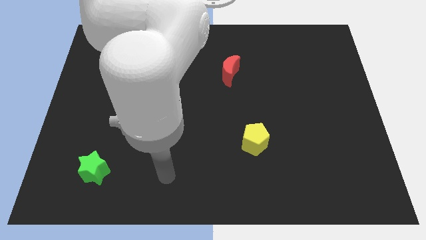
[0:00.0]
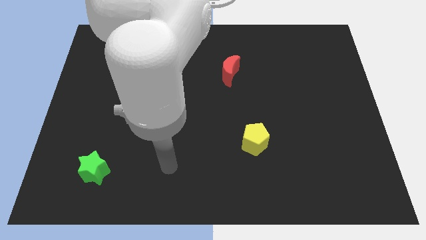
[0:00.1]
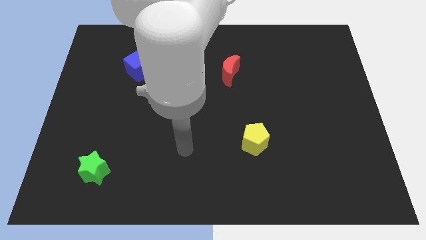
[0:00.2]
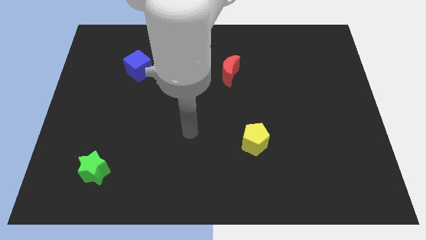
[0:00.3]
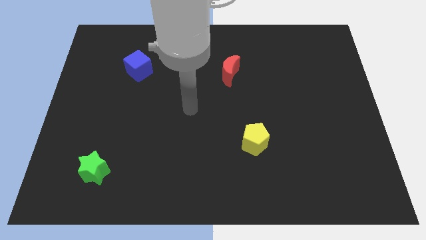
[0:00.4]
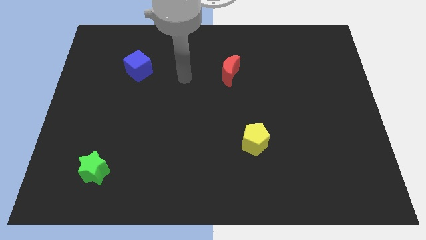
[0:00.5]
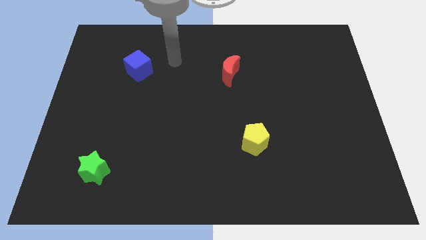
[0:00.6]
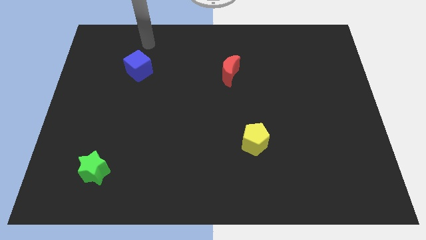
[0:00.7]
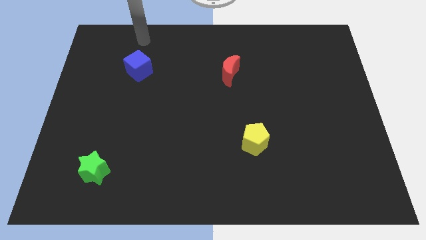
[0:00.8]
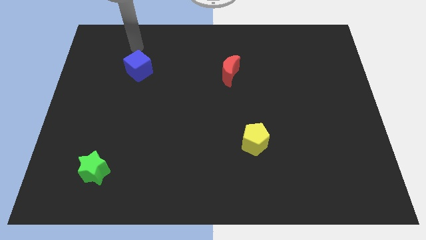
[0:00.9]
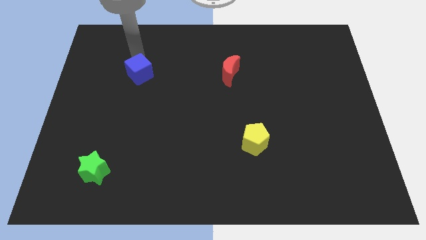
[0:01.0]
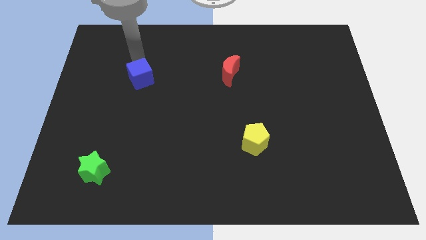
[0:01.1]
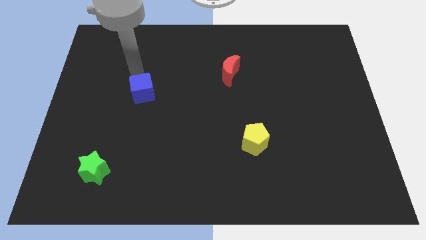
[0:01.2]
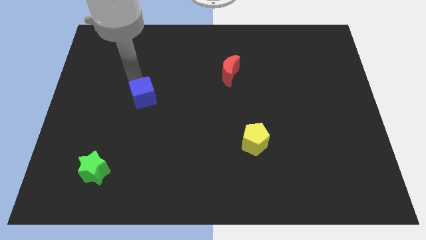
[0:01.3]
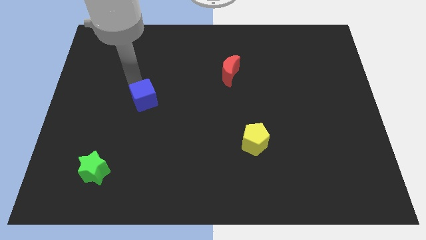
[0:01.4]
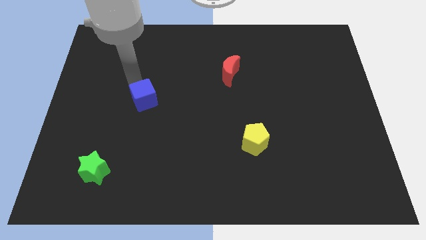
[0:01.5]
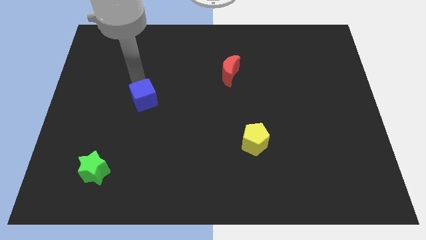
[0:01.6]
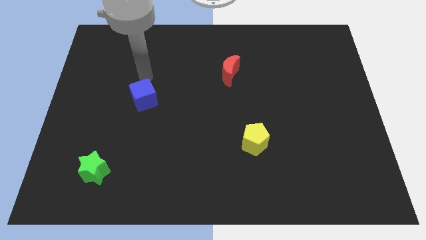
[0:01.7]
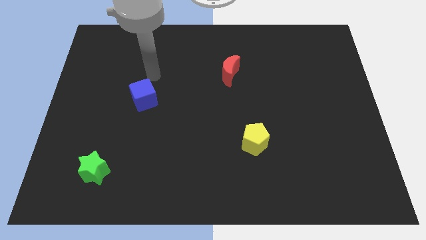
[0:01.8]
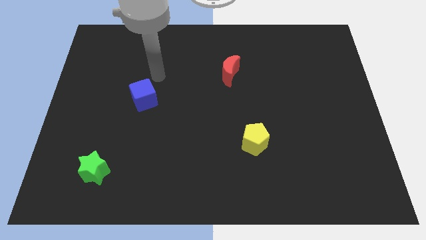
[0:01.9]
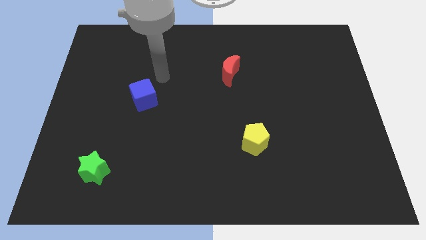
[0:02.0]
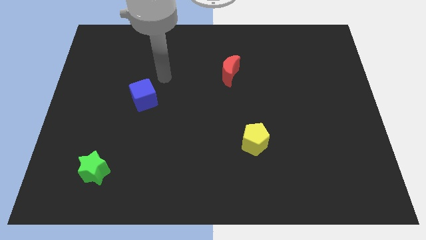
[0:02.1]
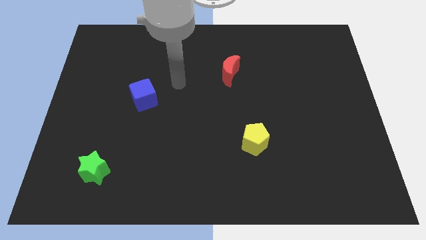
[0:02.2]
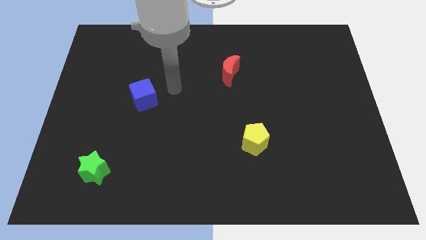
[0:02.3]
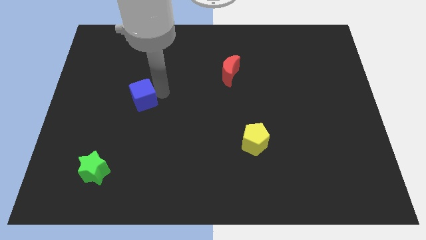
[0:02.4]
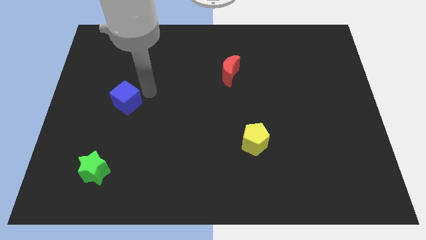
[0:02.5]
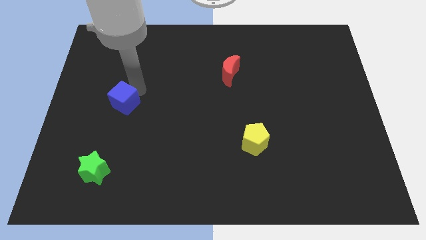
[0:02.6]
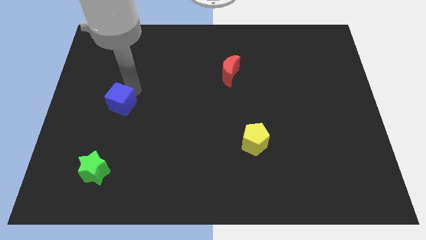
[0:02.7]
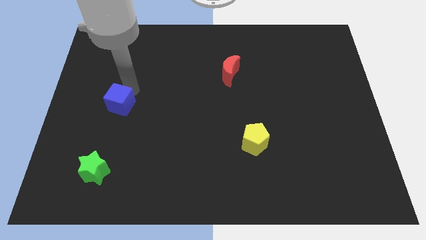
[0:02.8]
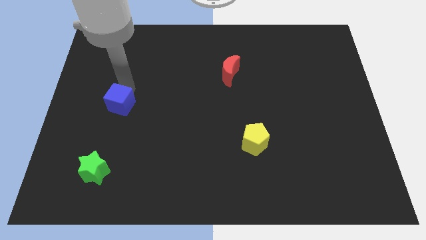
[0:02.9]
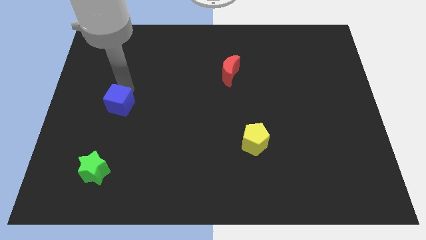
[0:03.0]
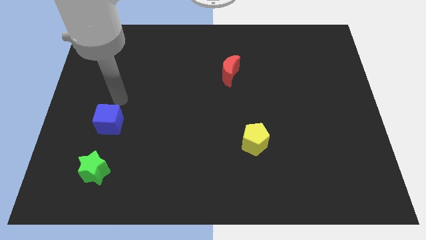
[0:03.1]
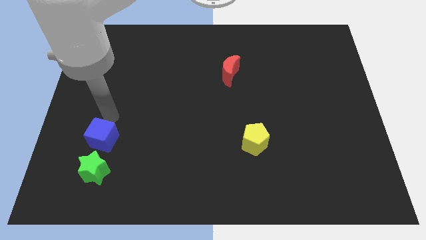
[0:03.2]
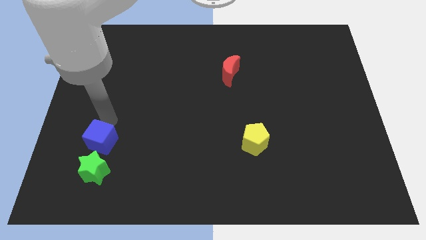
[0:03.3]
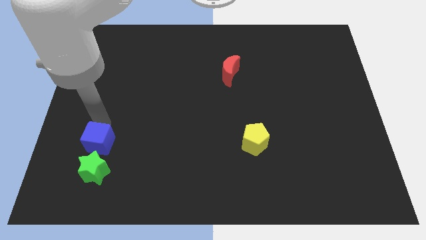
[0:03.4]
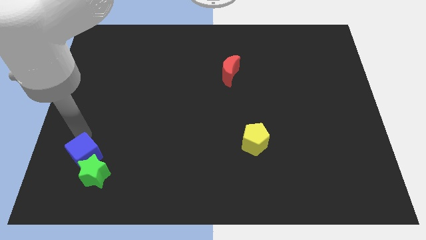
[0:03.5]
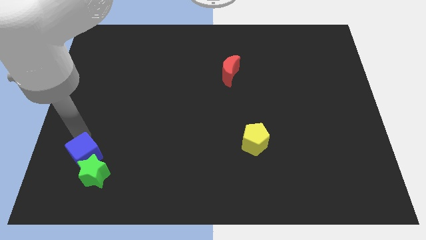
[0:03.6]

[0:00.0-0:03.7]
move the blue block to the green block

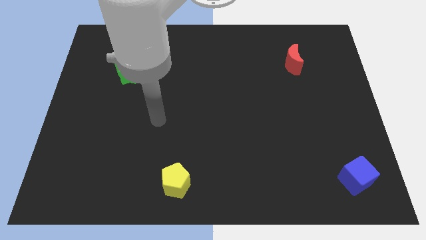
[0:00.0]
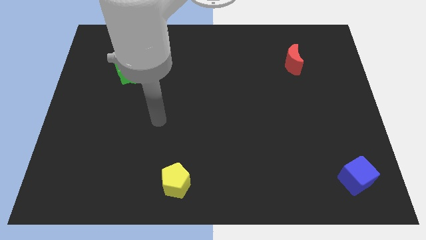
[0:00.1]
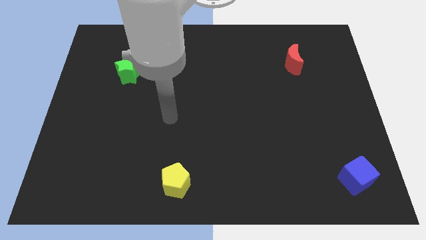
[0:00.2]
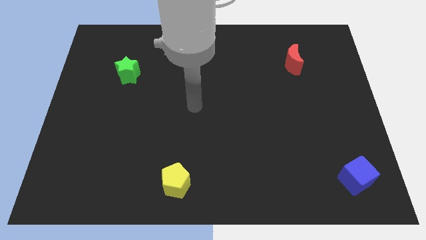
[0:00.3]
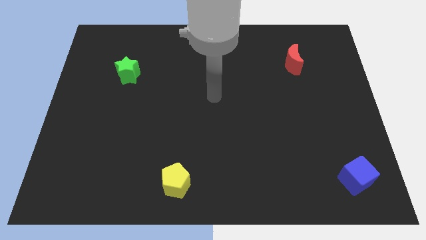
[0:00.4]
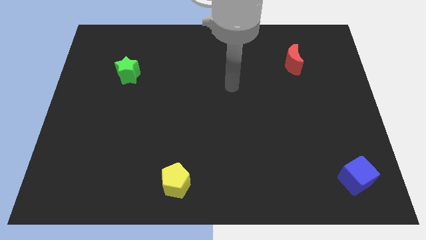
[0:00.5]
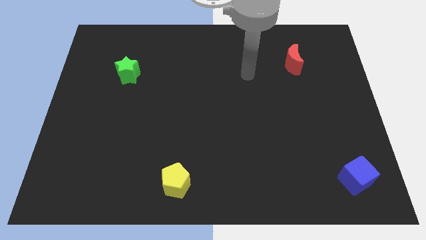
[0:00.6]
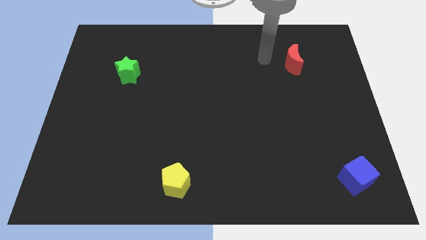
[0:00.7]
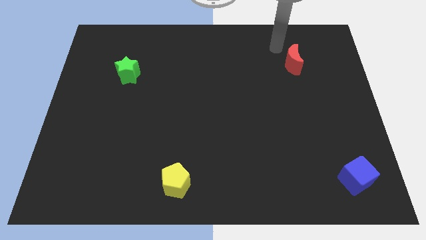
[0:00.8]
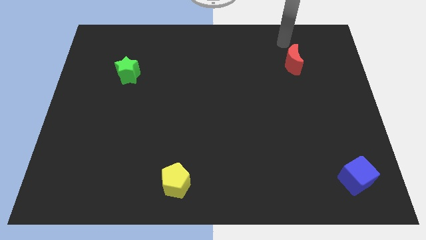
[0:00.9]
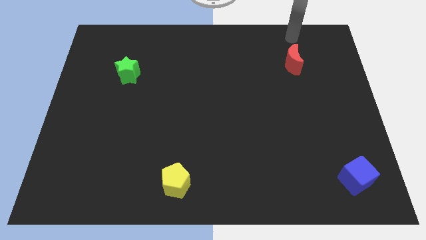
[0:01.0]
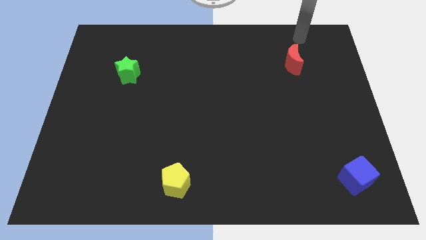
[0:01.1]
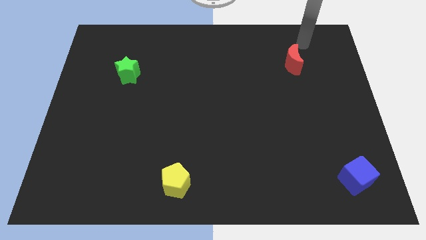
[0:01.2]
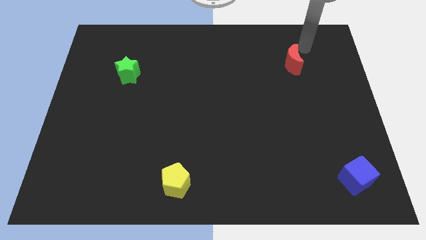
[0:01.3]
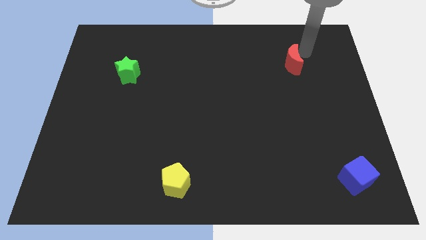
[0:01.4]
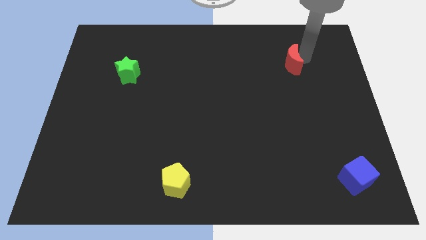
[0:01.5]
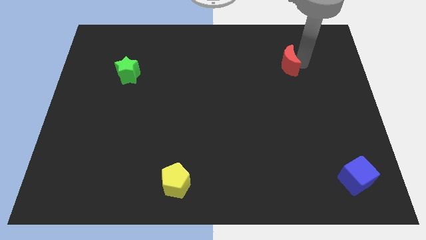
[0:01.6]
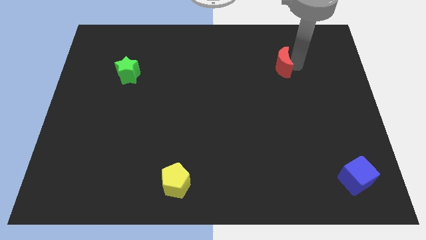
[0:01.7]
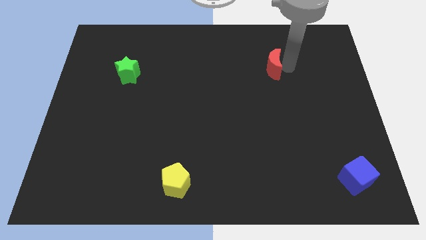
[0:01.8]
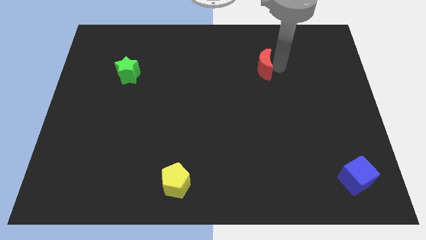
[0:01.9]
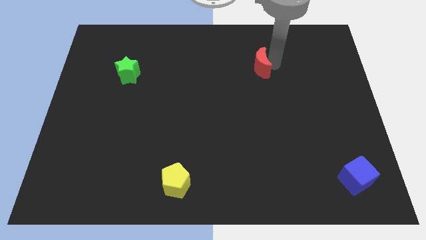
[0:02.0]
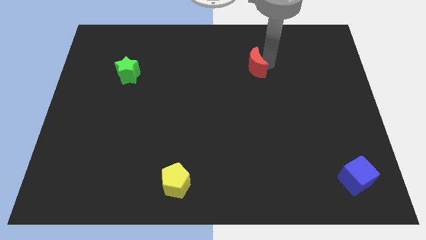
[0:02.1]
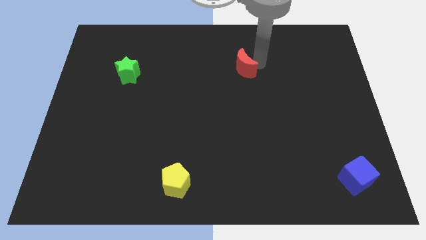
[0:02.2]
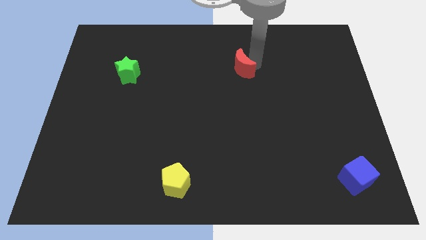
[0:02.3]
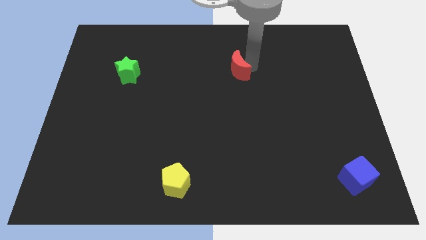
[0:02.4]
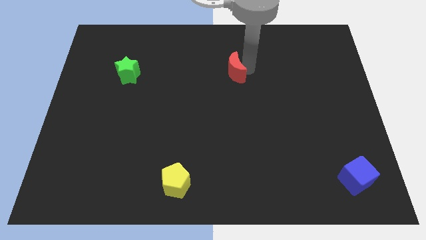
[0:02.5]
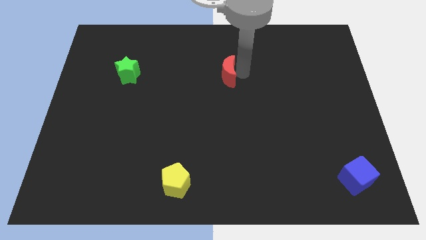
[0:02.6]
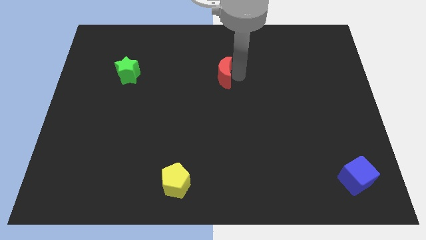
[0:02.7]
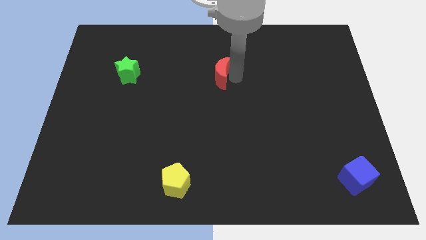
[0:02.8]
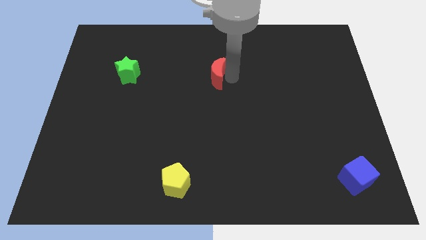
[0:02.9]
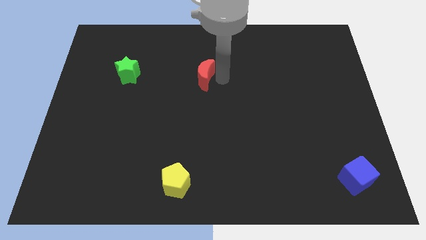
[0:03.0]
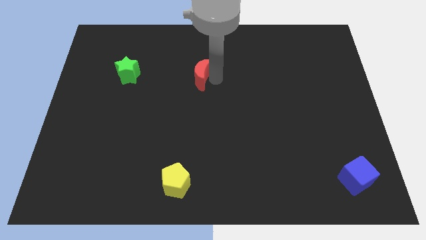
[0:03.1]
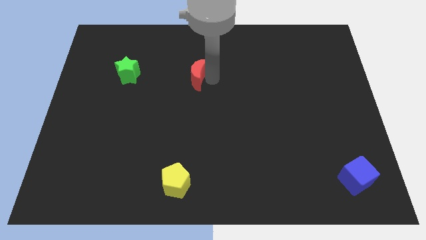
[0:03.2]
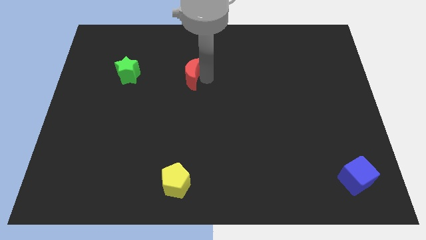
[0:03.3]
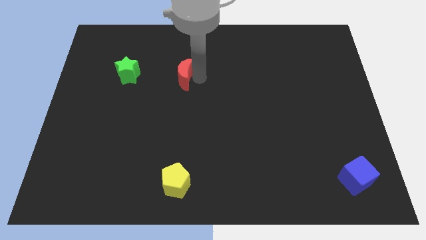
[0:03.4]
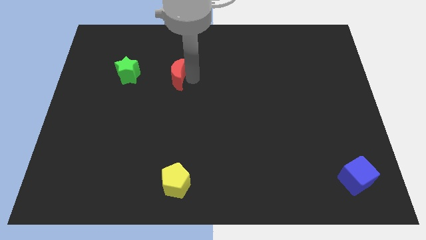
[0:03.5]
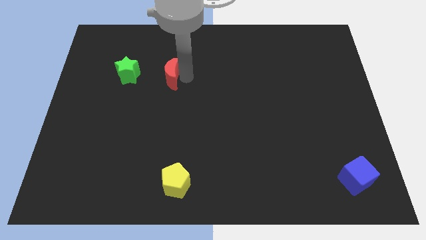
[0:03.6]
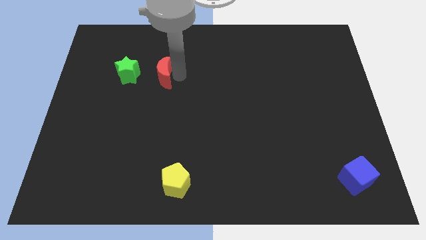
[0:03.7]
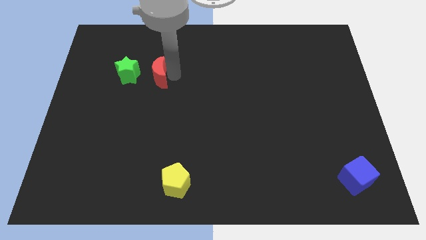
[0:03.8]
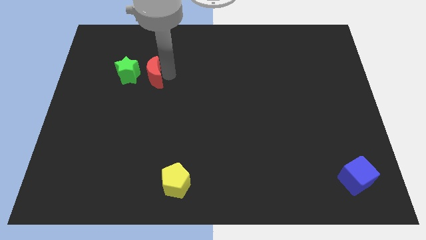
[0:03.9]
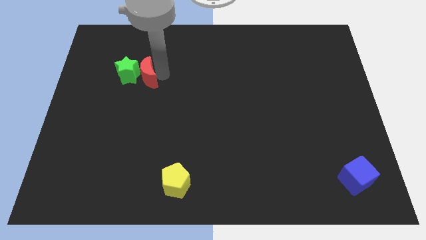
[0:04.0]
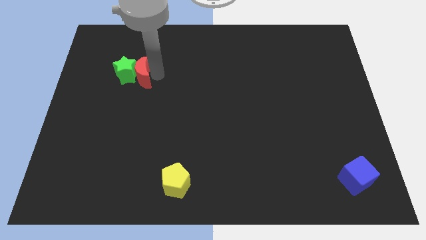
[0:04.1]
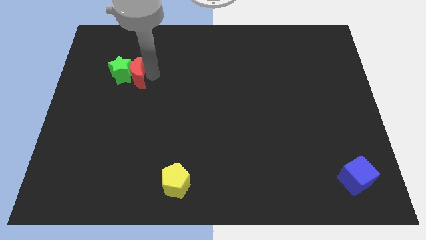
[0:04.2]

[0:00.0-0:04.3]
slide the red block to the star

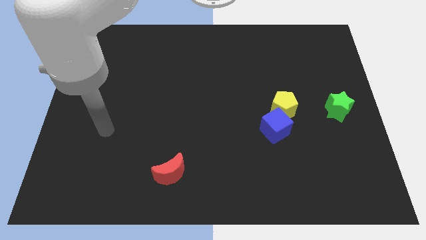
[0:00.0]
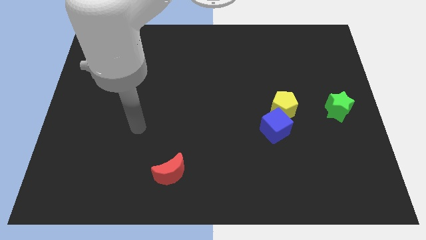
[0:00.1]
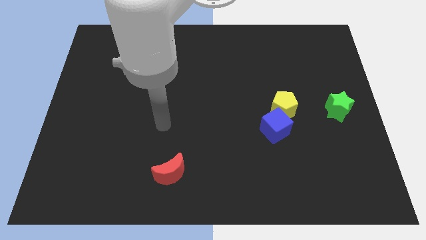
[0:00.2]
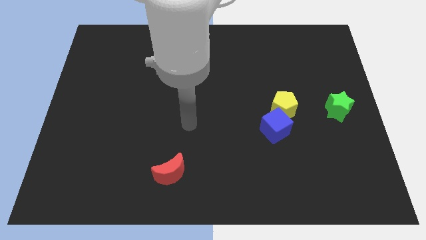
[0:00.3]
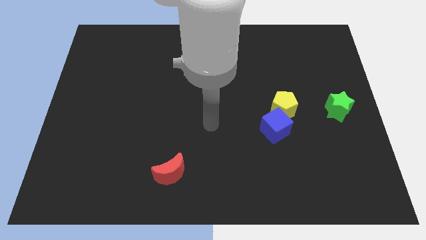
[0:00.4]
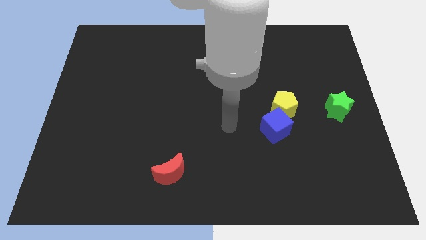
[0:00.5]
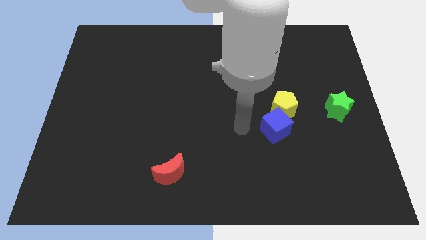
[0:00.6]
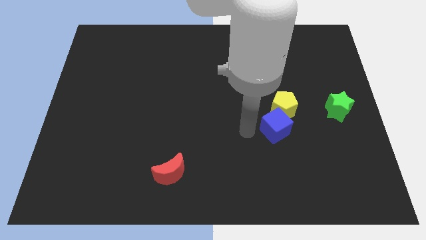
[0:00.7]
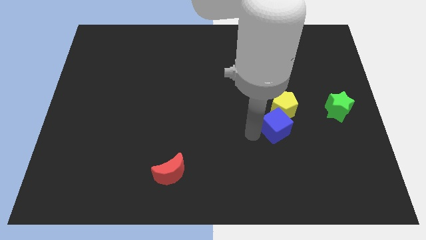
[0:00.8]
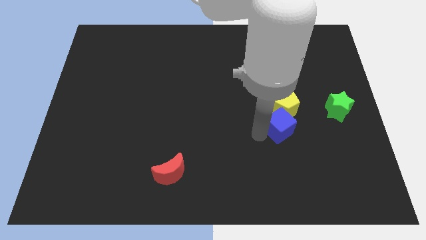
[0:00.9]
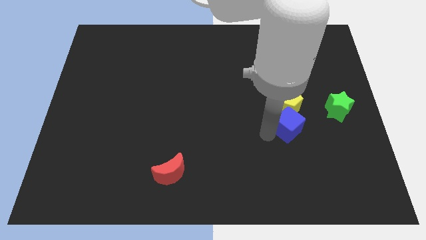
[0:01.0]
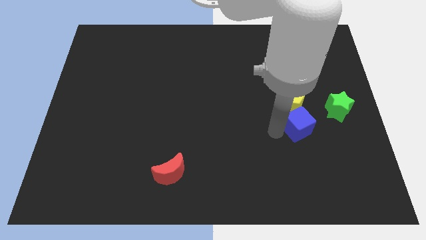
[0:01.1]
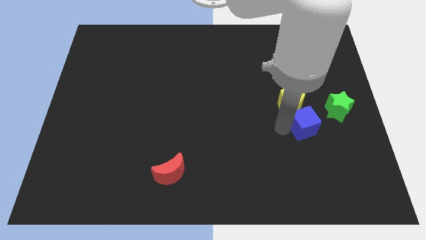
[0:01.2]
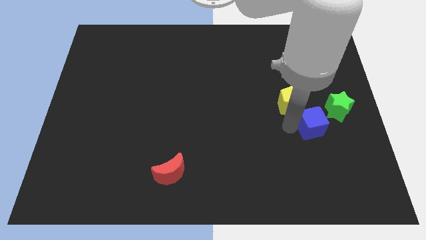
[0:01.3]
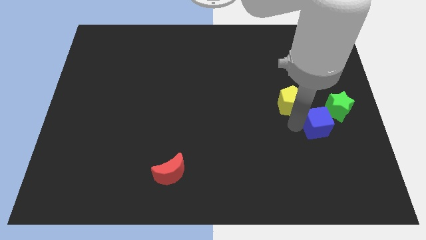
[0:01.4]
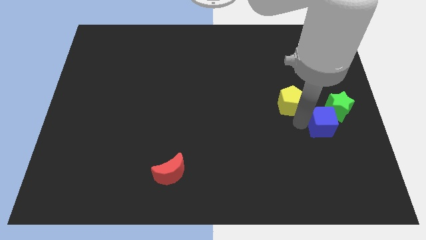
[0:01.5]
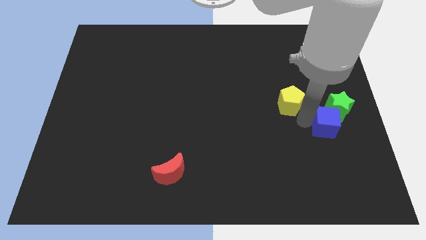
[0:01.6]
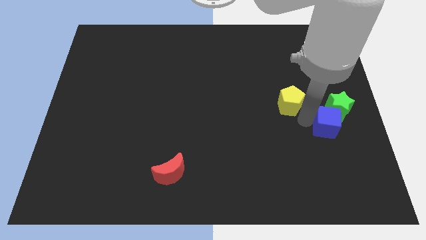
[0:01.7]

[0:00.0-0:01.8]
move the blue block to the star
